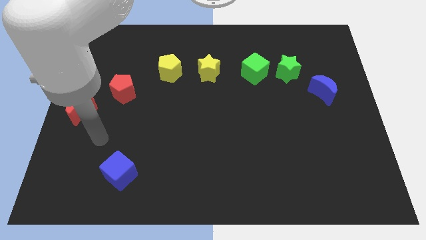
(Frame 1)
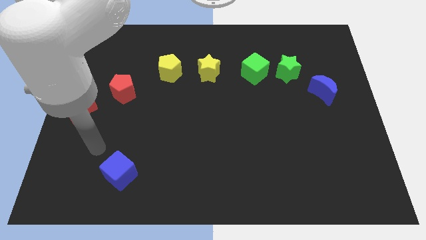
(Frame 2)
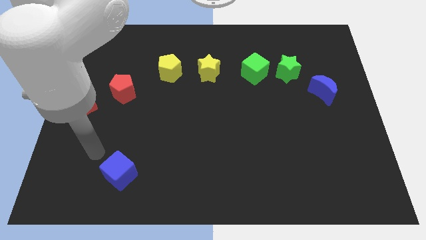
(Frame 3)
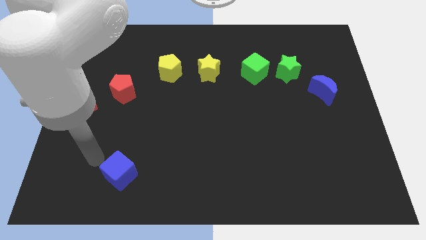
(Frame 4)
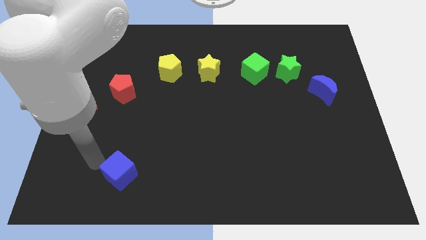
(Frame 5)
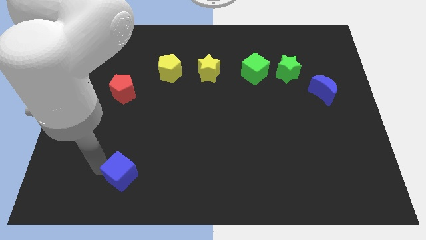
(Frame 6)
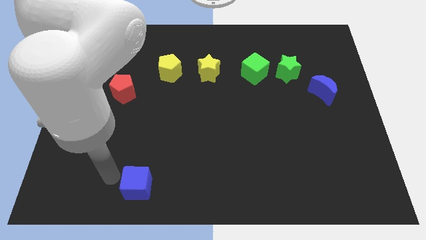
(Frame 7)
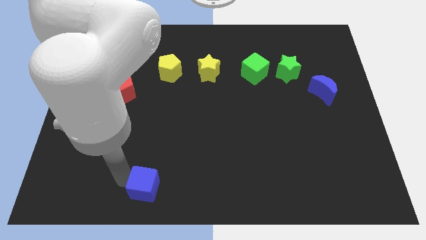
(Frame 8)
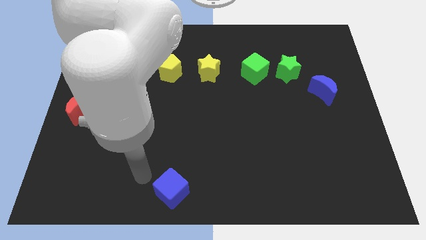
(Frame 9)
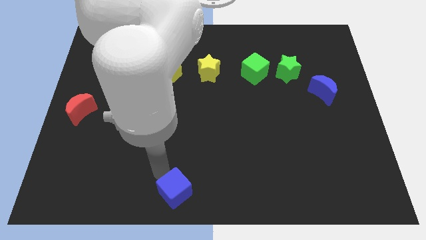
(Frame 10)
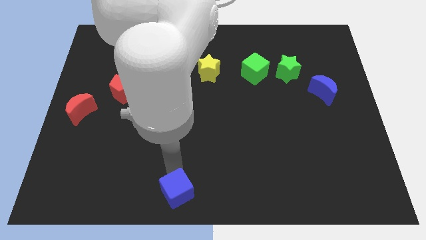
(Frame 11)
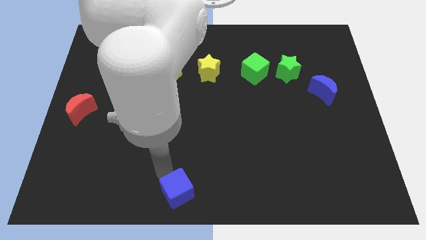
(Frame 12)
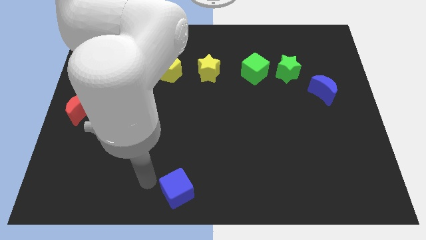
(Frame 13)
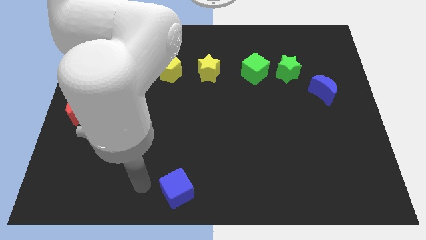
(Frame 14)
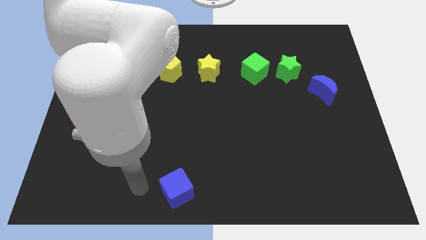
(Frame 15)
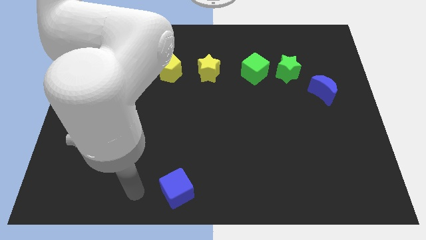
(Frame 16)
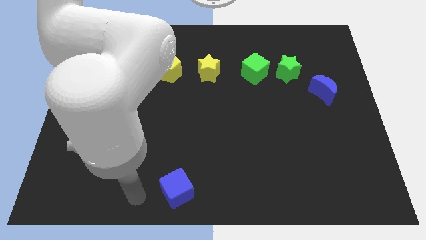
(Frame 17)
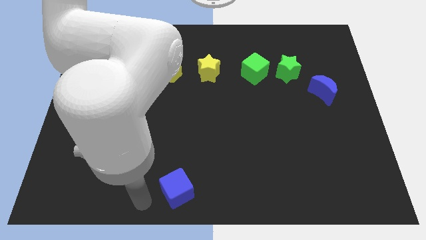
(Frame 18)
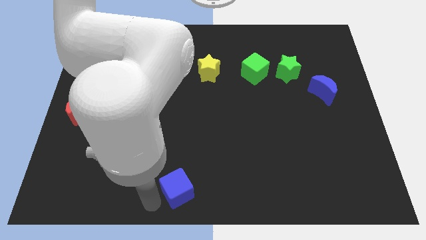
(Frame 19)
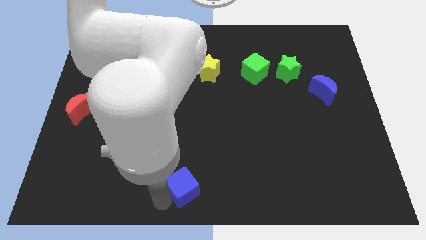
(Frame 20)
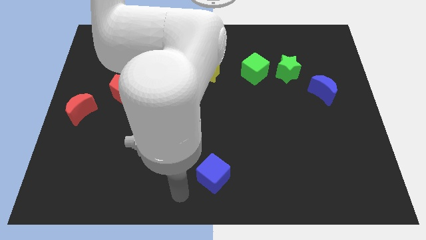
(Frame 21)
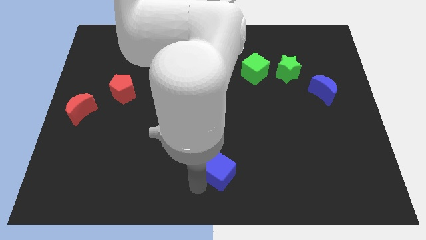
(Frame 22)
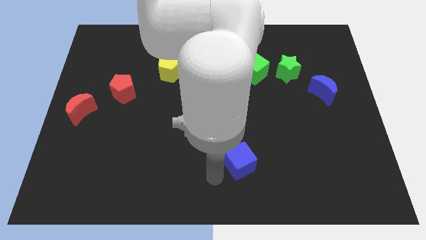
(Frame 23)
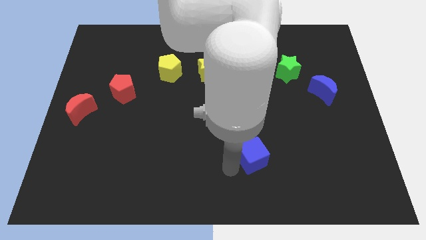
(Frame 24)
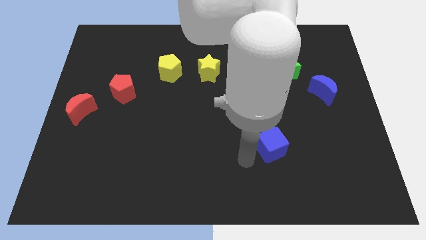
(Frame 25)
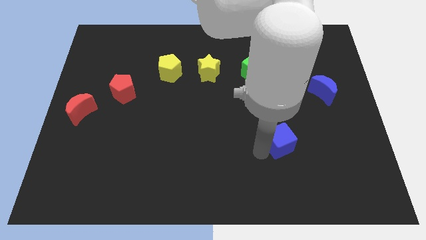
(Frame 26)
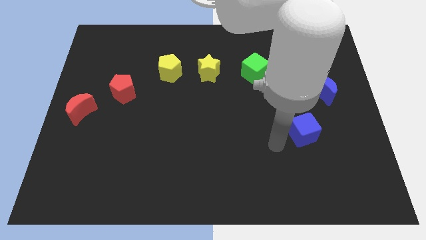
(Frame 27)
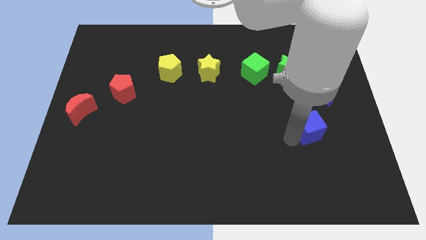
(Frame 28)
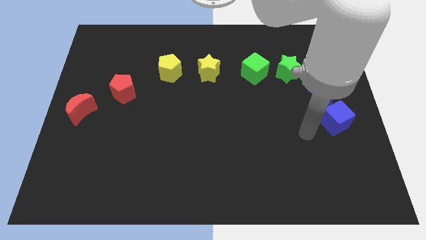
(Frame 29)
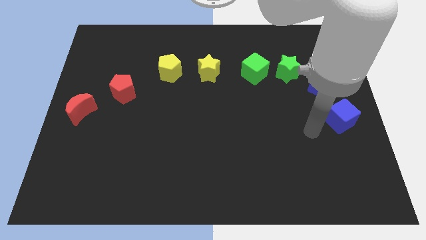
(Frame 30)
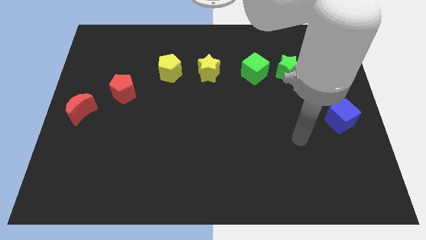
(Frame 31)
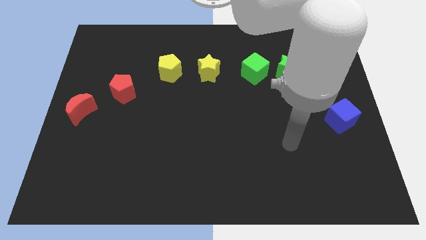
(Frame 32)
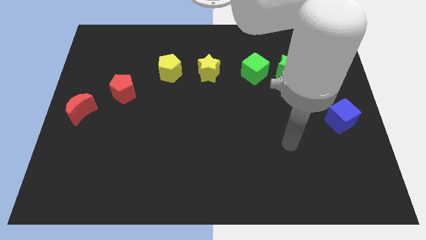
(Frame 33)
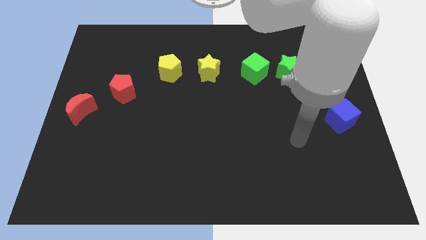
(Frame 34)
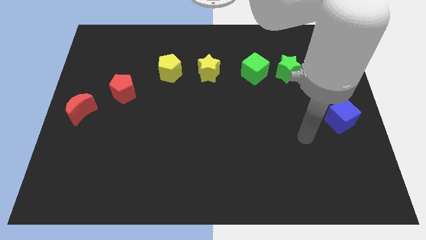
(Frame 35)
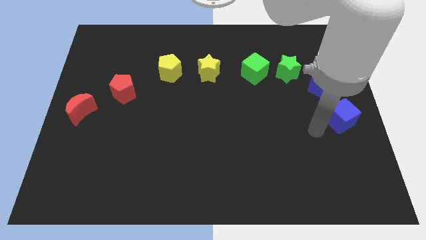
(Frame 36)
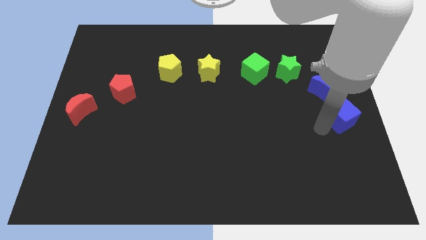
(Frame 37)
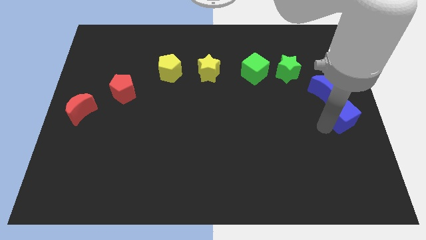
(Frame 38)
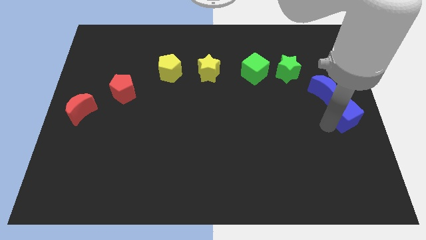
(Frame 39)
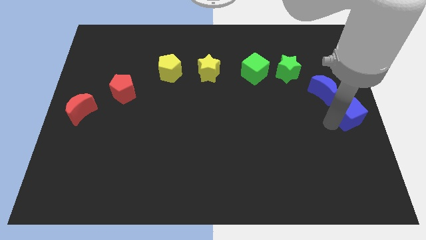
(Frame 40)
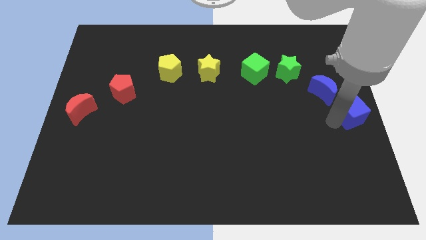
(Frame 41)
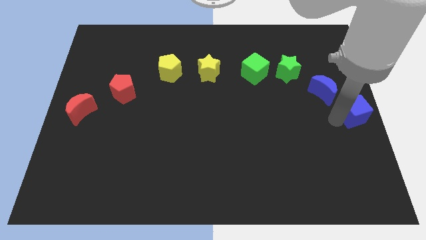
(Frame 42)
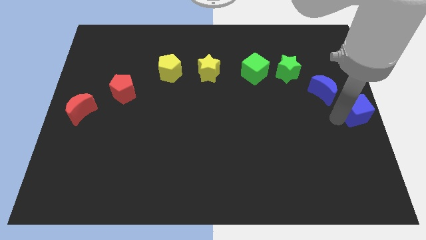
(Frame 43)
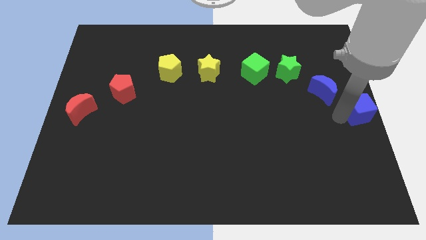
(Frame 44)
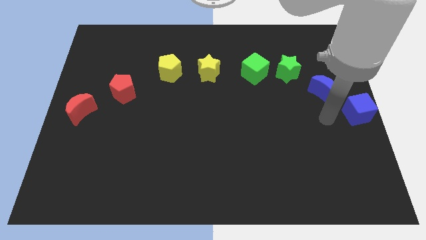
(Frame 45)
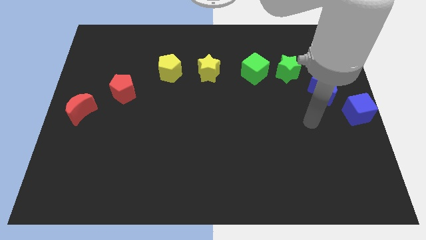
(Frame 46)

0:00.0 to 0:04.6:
place the blue cube at the center right of the board

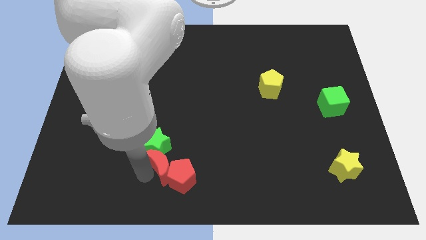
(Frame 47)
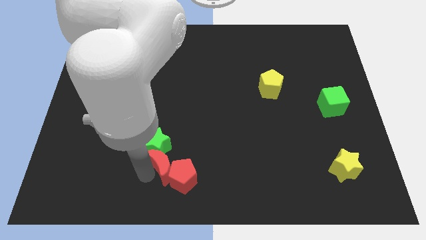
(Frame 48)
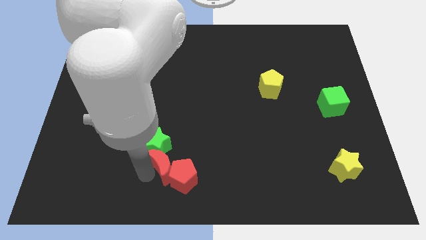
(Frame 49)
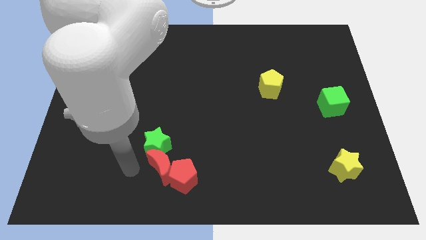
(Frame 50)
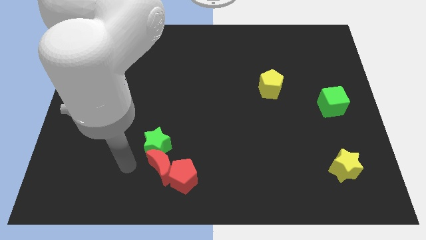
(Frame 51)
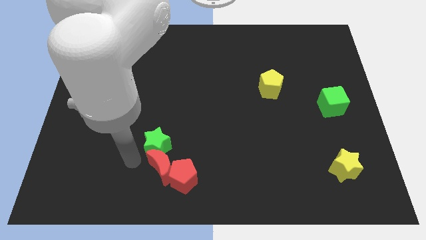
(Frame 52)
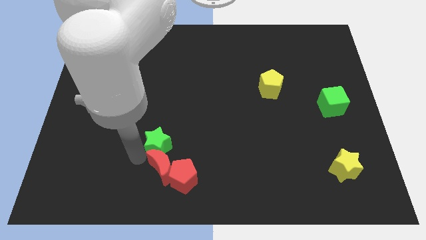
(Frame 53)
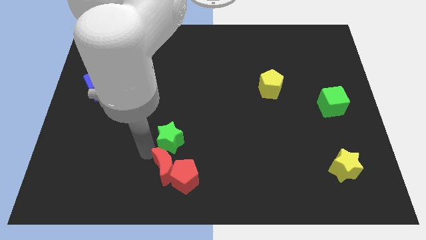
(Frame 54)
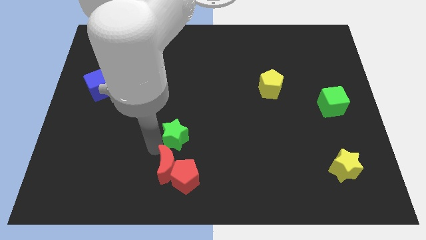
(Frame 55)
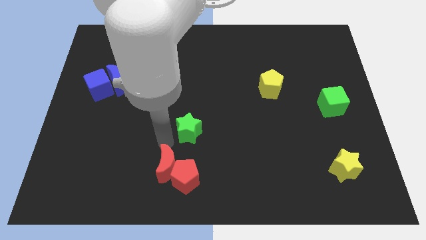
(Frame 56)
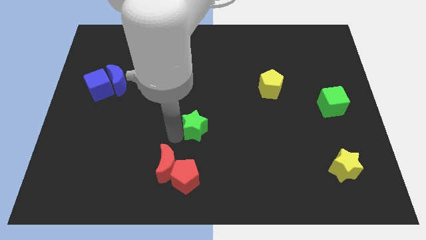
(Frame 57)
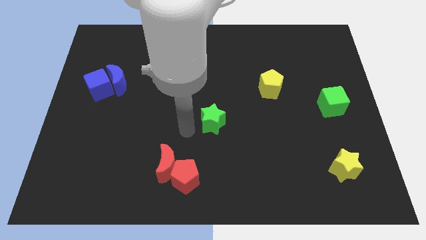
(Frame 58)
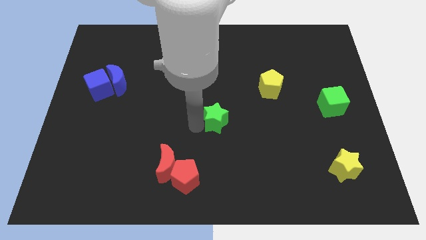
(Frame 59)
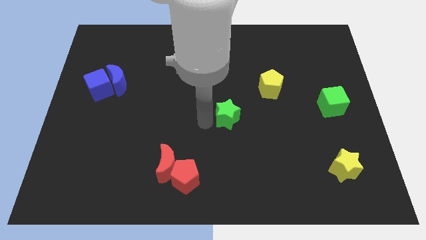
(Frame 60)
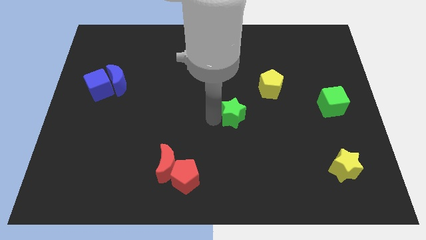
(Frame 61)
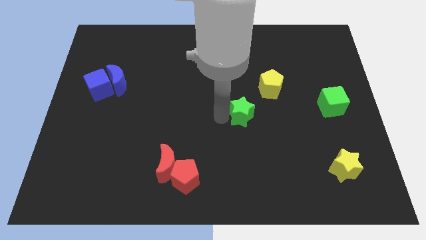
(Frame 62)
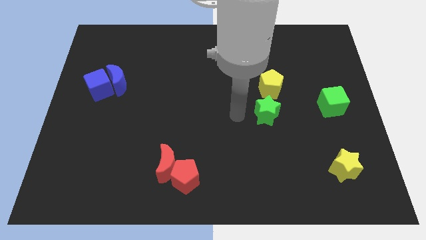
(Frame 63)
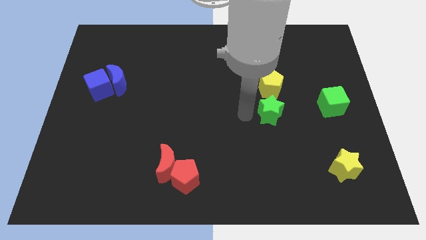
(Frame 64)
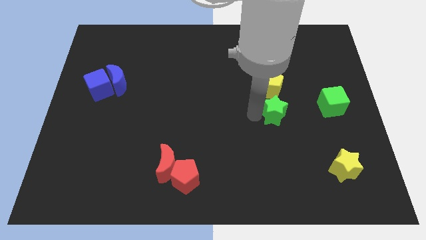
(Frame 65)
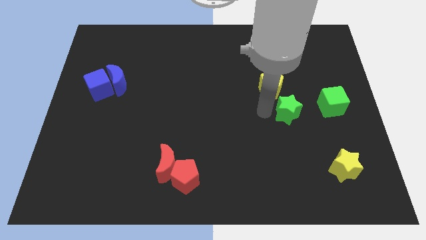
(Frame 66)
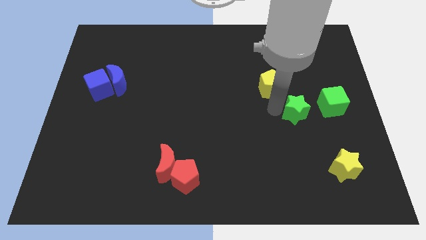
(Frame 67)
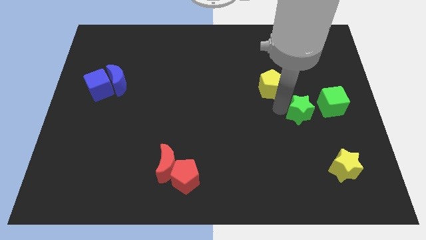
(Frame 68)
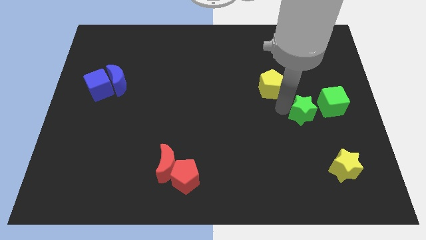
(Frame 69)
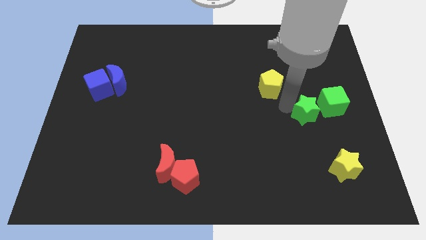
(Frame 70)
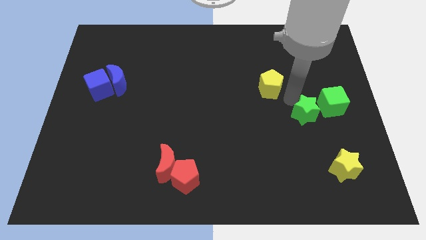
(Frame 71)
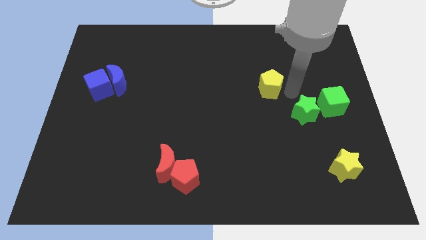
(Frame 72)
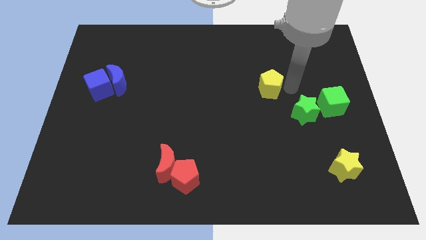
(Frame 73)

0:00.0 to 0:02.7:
move the green star to the left of the green cube

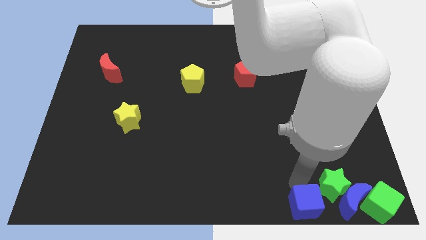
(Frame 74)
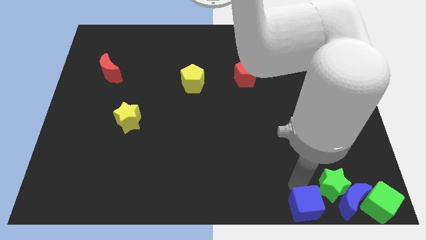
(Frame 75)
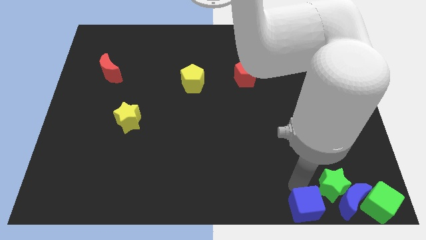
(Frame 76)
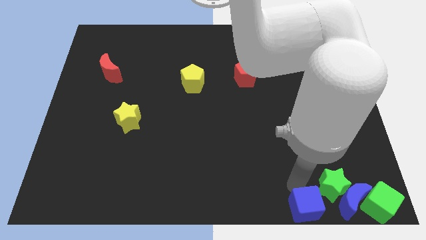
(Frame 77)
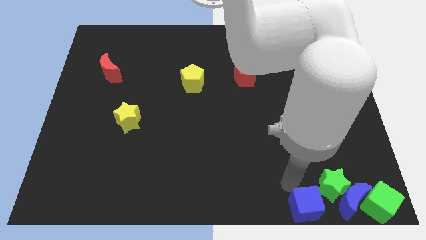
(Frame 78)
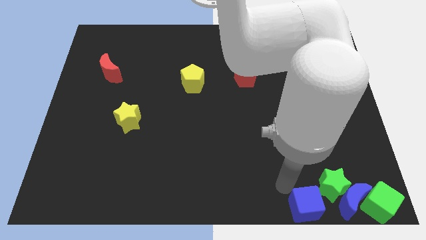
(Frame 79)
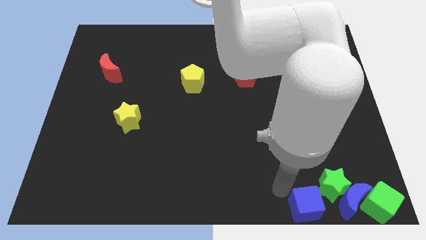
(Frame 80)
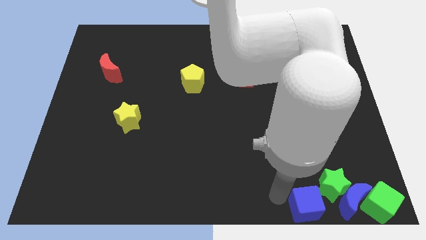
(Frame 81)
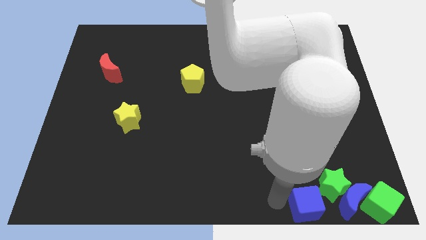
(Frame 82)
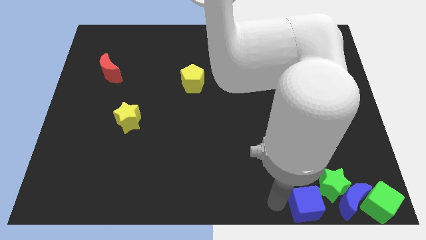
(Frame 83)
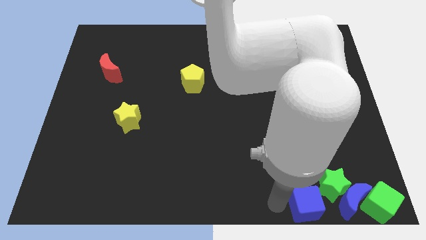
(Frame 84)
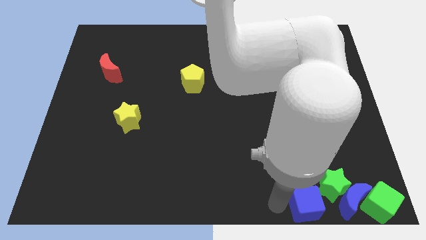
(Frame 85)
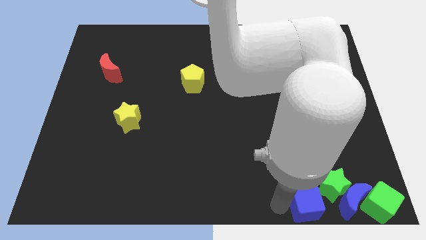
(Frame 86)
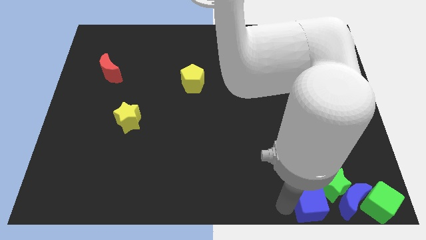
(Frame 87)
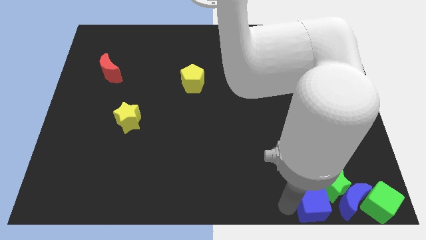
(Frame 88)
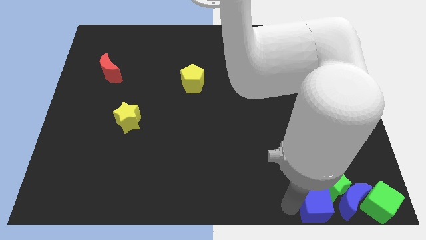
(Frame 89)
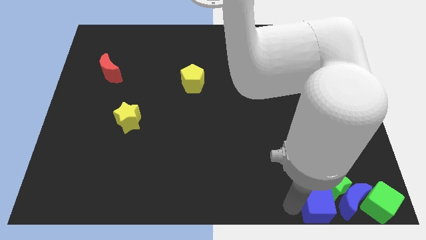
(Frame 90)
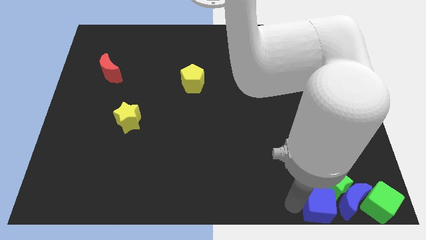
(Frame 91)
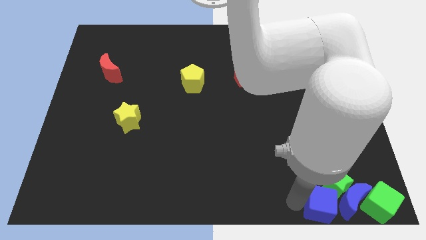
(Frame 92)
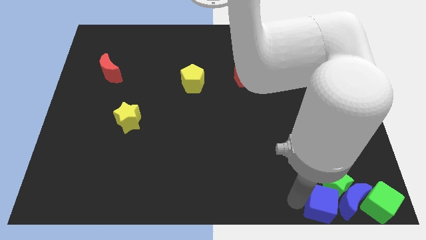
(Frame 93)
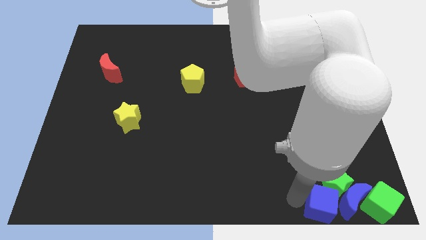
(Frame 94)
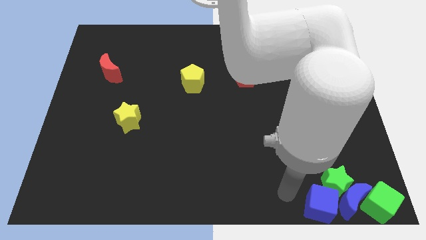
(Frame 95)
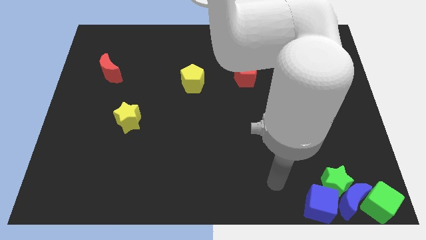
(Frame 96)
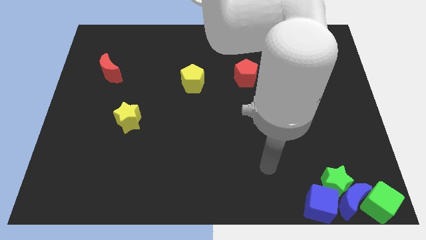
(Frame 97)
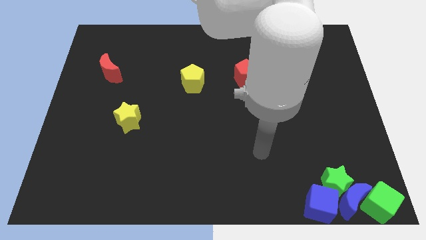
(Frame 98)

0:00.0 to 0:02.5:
push blue cube to the bottom of green star
